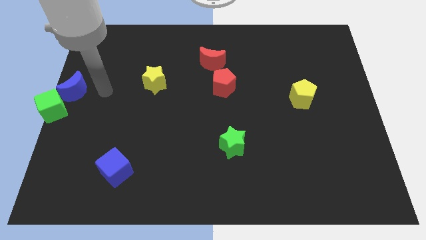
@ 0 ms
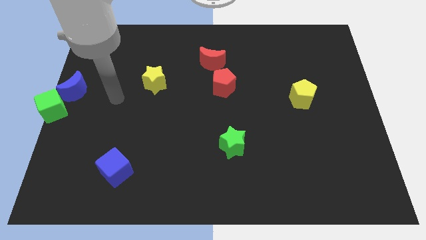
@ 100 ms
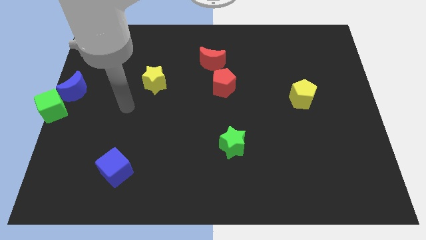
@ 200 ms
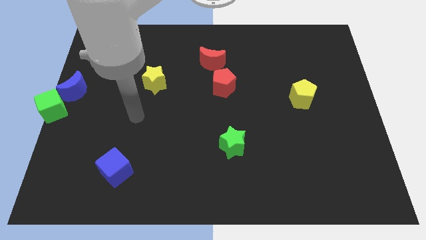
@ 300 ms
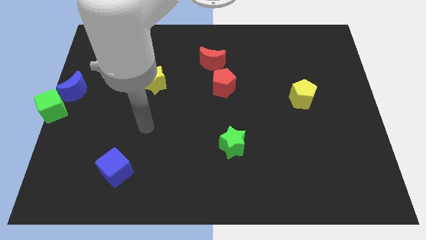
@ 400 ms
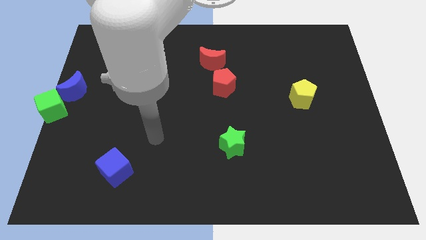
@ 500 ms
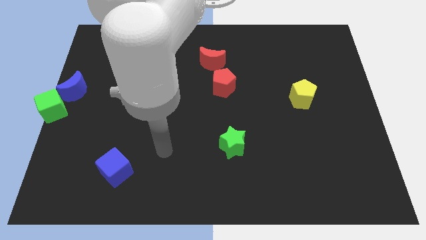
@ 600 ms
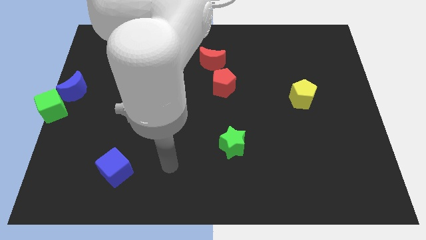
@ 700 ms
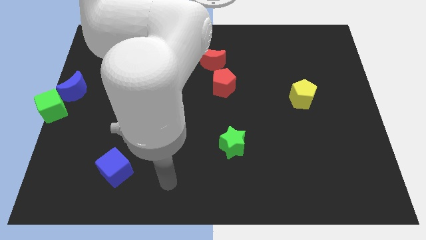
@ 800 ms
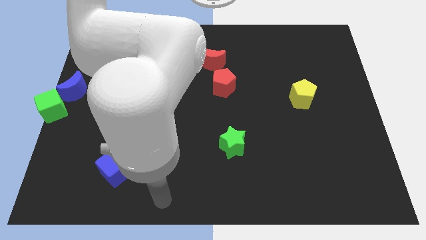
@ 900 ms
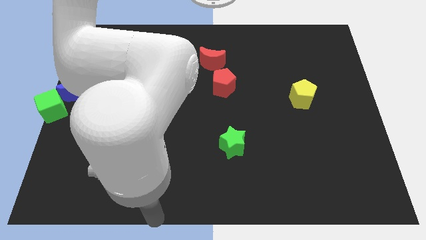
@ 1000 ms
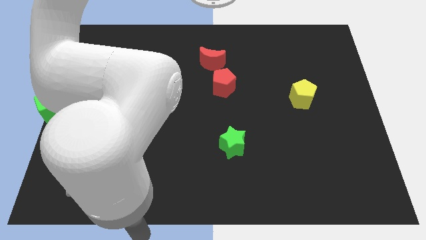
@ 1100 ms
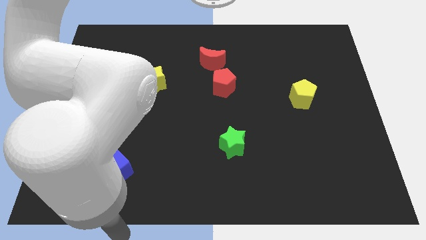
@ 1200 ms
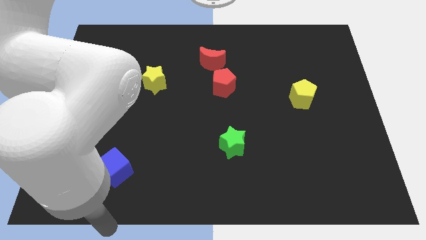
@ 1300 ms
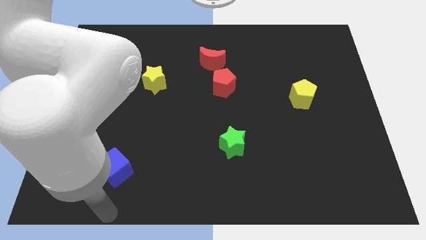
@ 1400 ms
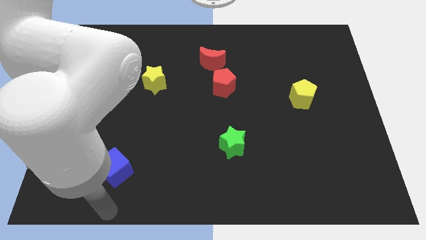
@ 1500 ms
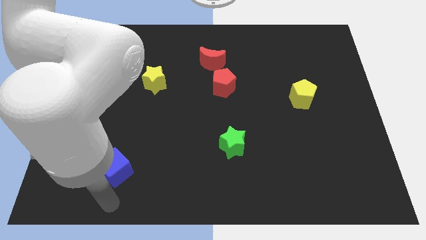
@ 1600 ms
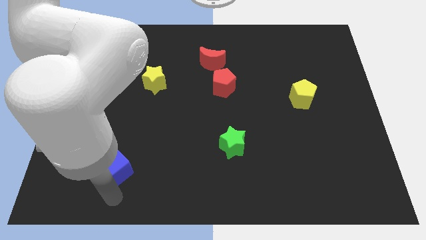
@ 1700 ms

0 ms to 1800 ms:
place your arm at the bottom of the blue cube

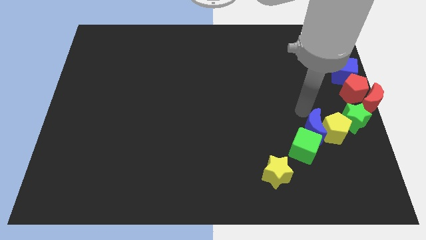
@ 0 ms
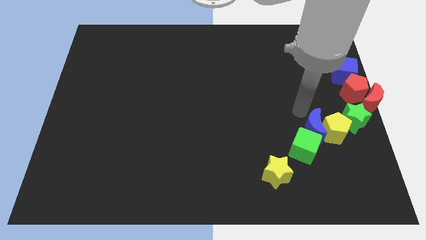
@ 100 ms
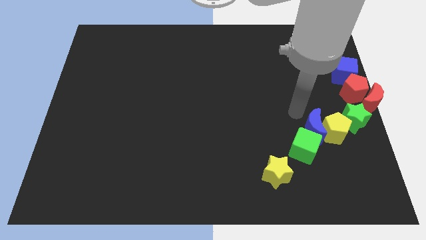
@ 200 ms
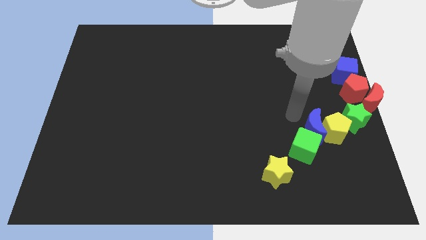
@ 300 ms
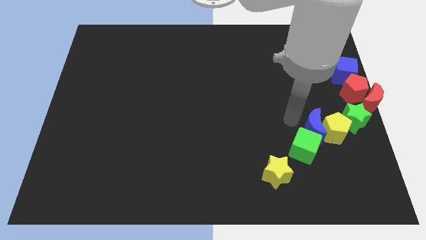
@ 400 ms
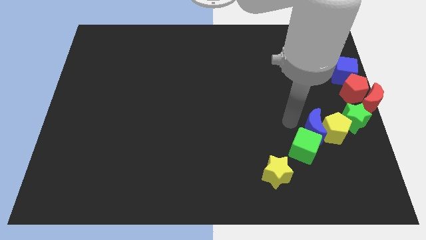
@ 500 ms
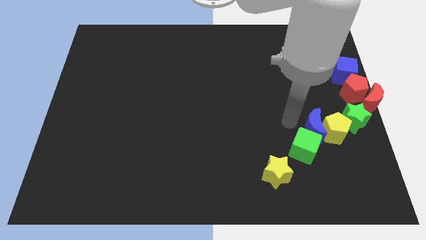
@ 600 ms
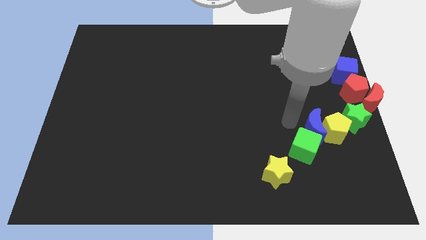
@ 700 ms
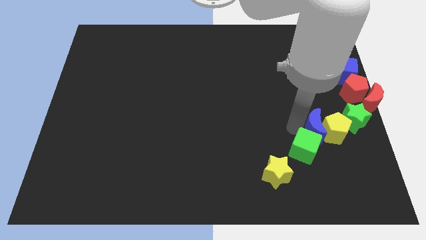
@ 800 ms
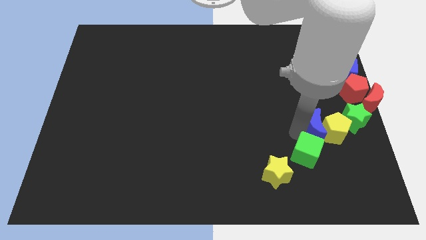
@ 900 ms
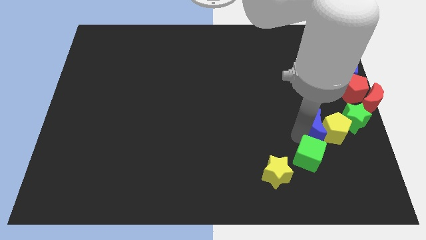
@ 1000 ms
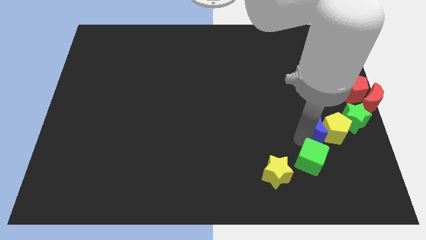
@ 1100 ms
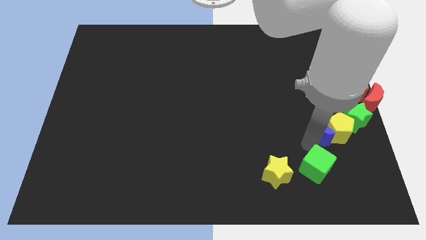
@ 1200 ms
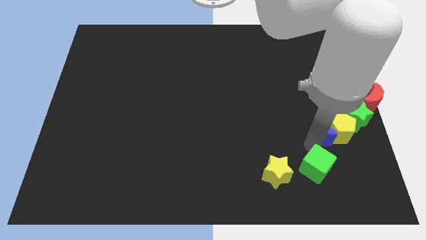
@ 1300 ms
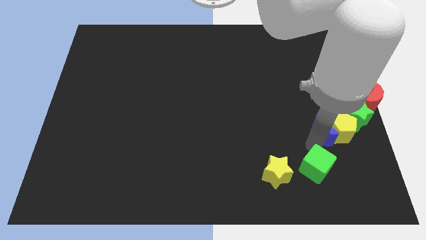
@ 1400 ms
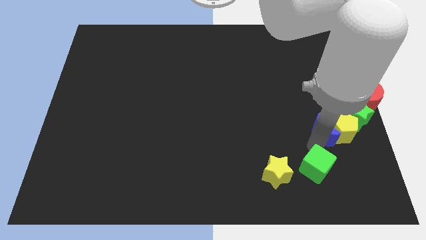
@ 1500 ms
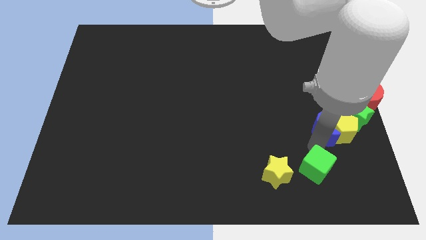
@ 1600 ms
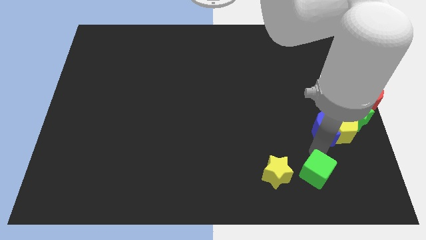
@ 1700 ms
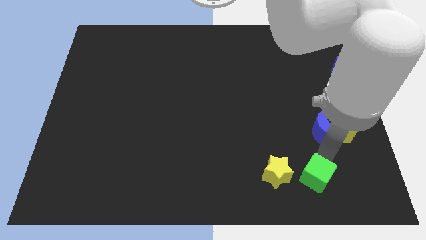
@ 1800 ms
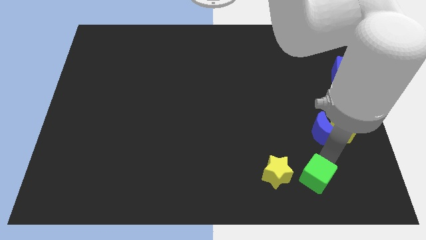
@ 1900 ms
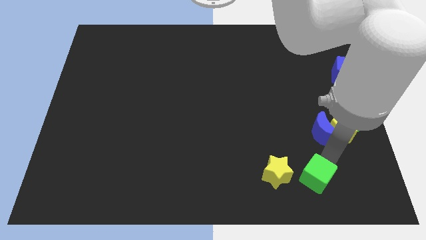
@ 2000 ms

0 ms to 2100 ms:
separate green cube from blue moon

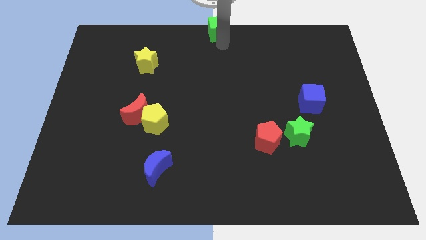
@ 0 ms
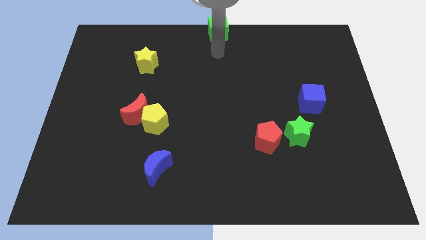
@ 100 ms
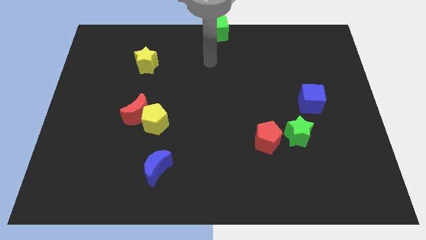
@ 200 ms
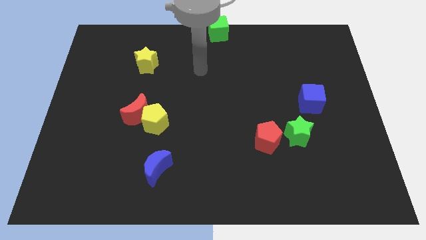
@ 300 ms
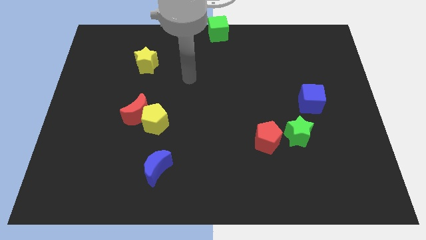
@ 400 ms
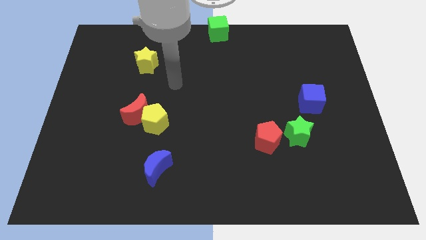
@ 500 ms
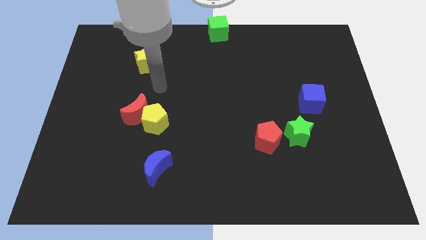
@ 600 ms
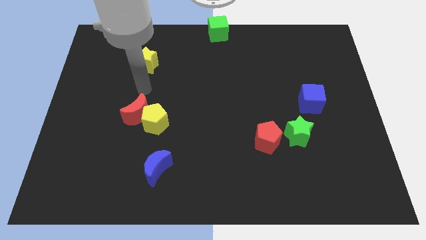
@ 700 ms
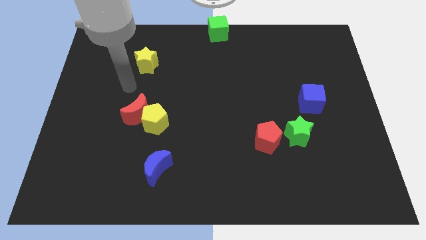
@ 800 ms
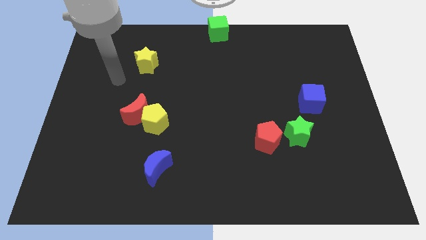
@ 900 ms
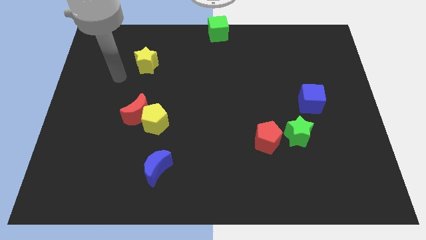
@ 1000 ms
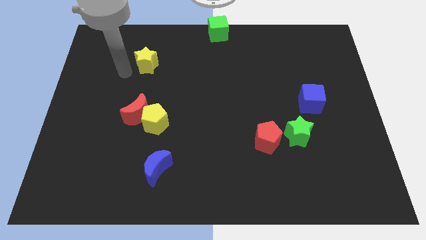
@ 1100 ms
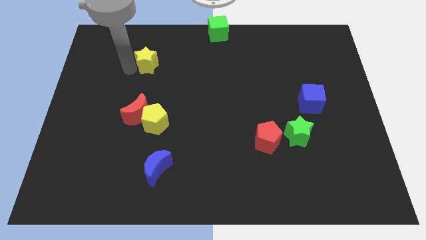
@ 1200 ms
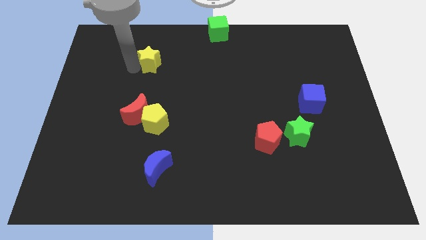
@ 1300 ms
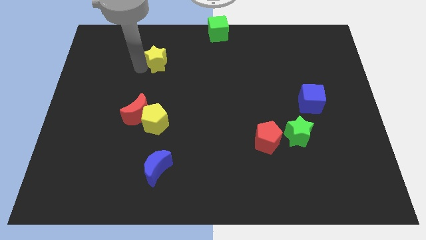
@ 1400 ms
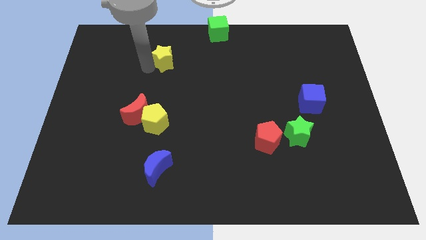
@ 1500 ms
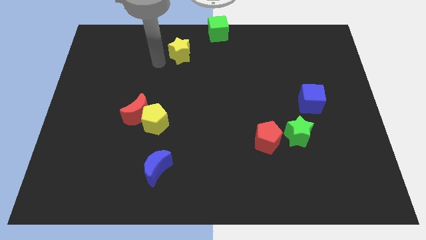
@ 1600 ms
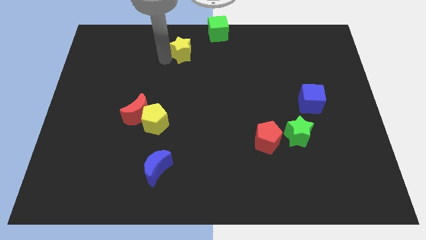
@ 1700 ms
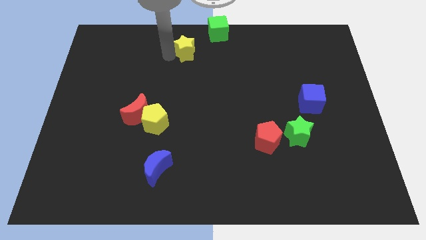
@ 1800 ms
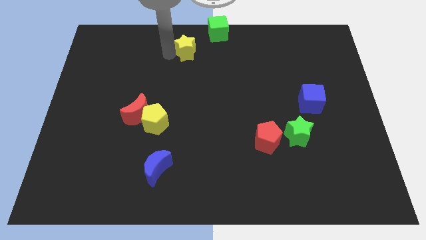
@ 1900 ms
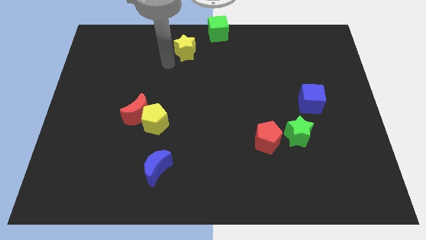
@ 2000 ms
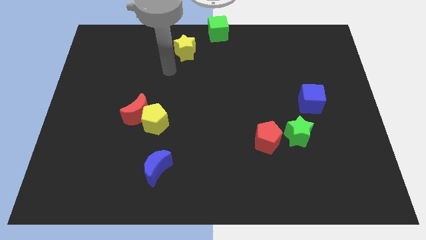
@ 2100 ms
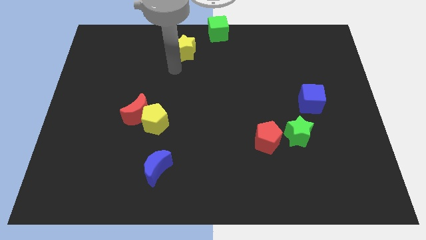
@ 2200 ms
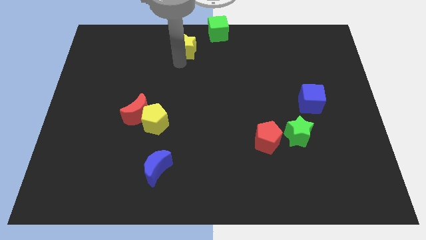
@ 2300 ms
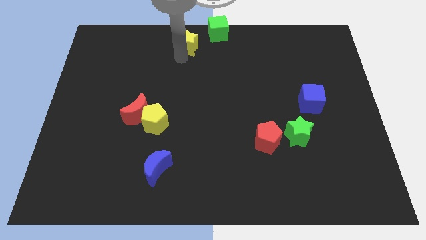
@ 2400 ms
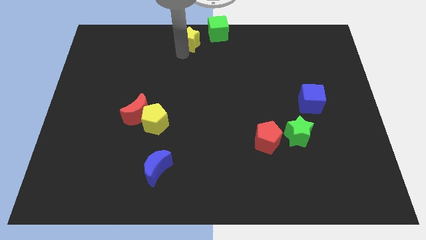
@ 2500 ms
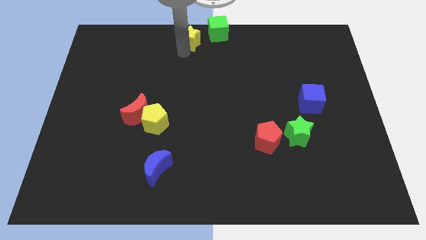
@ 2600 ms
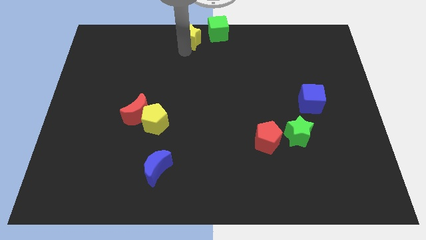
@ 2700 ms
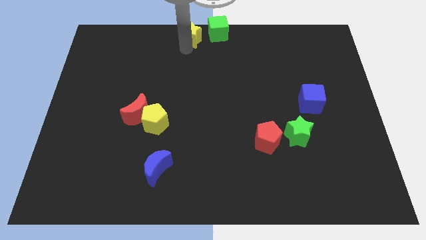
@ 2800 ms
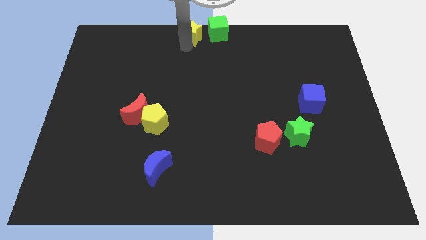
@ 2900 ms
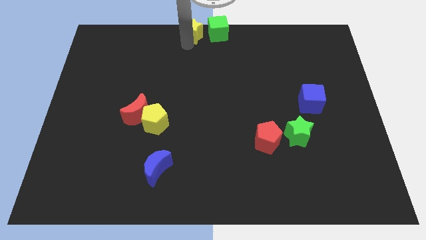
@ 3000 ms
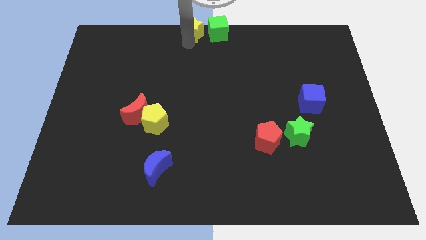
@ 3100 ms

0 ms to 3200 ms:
place yellow star to the left of green cube

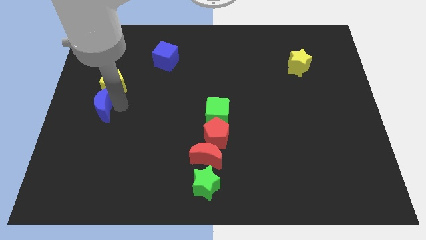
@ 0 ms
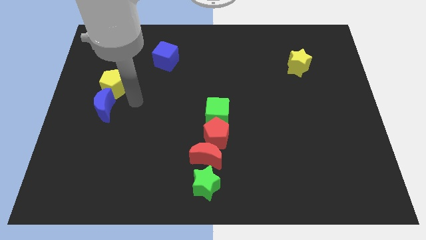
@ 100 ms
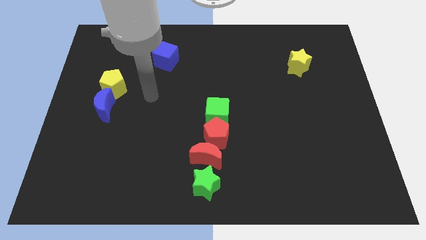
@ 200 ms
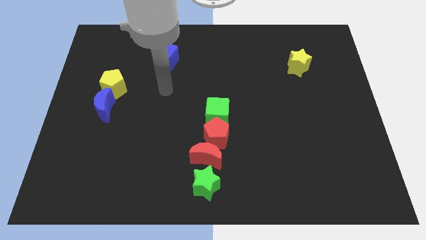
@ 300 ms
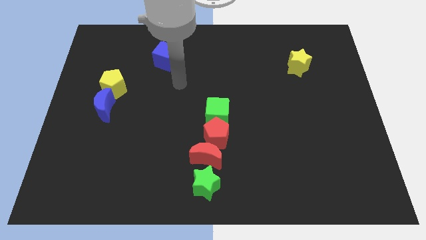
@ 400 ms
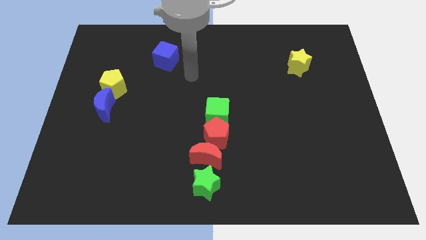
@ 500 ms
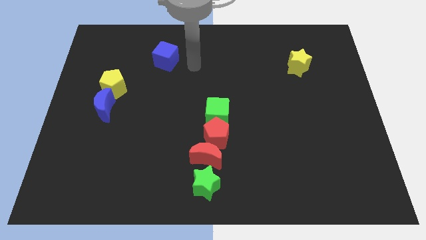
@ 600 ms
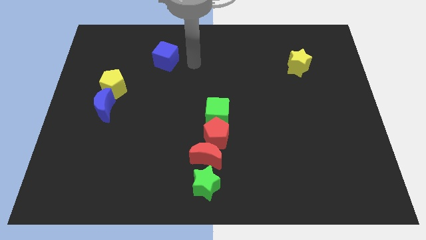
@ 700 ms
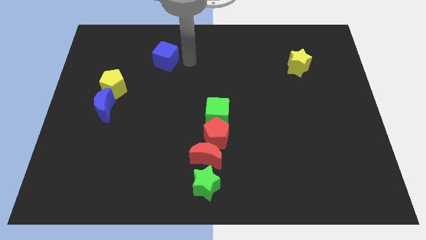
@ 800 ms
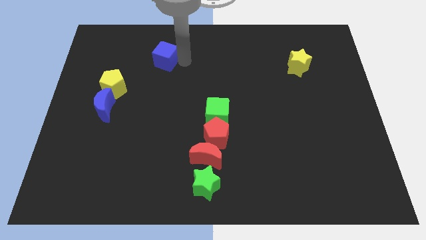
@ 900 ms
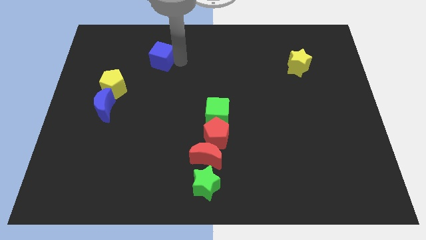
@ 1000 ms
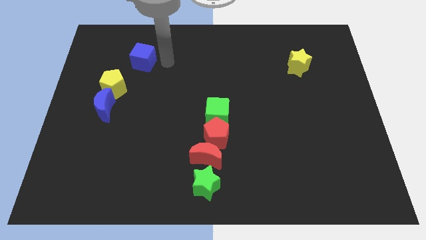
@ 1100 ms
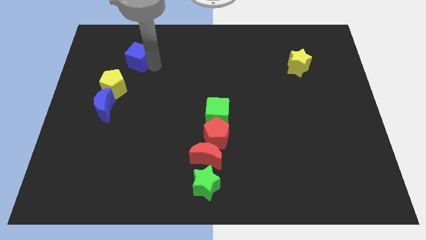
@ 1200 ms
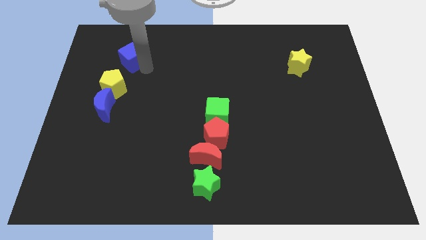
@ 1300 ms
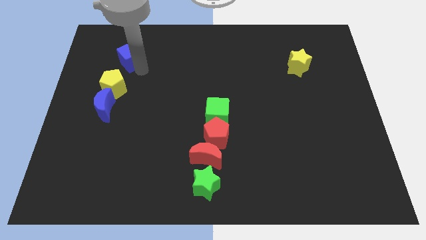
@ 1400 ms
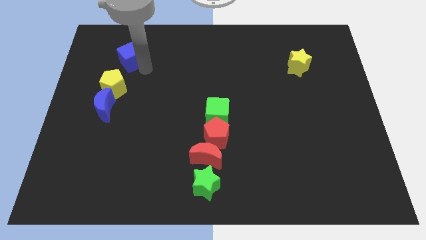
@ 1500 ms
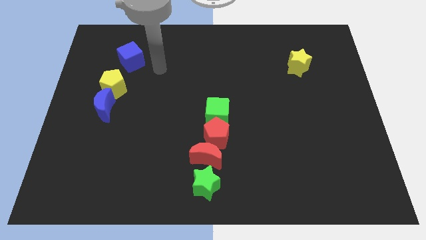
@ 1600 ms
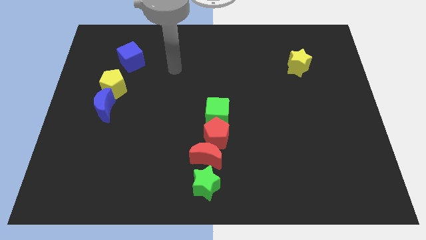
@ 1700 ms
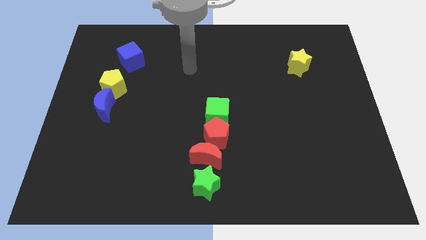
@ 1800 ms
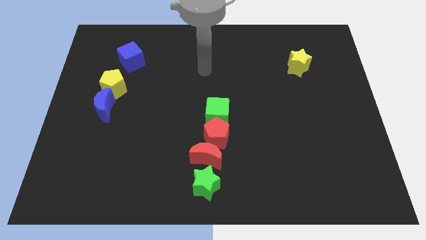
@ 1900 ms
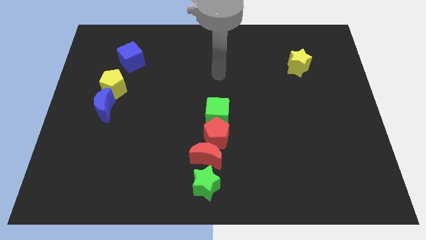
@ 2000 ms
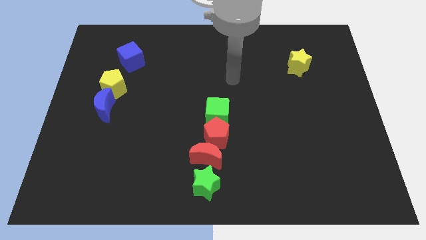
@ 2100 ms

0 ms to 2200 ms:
push blue cube to the left side
